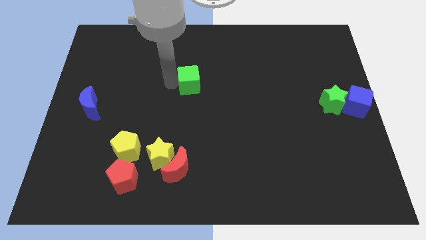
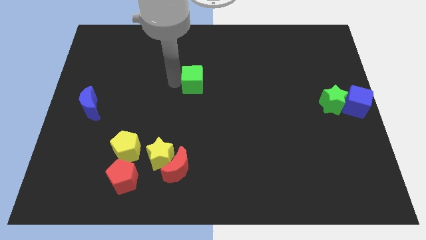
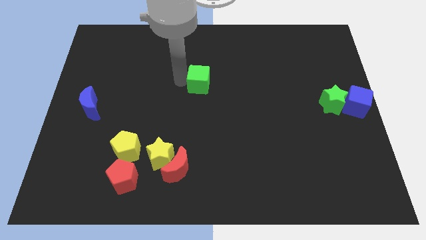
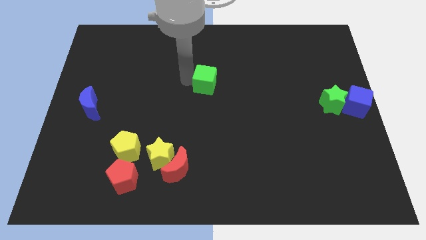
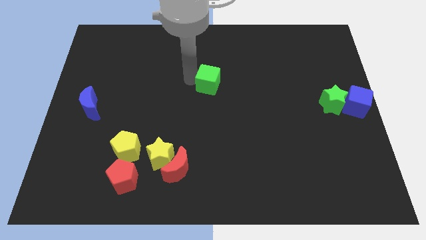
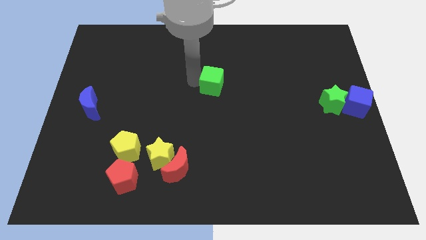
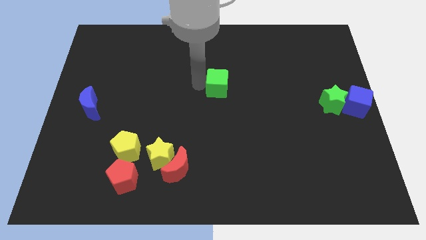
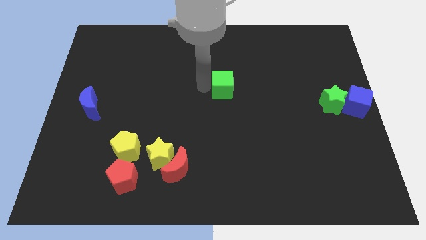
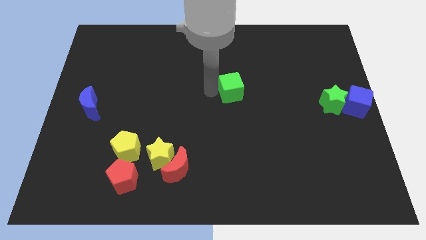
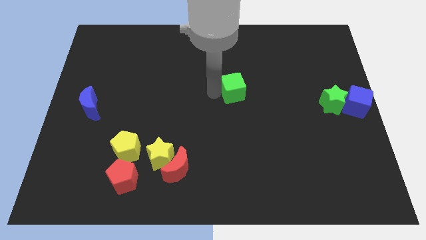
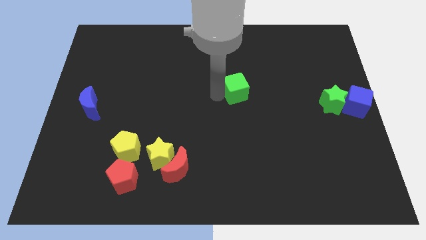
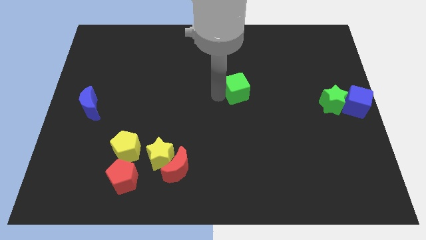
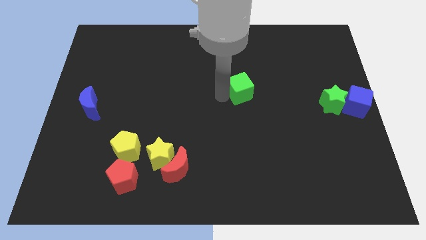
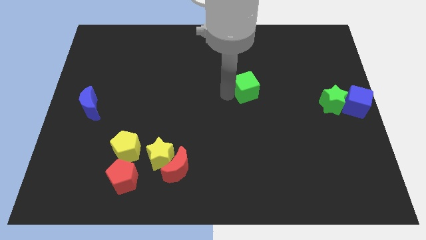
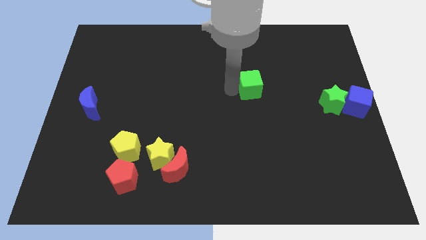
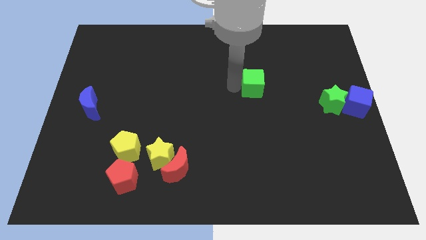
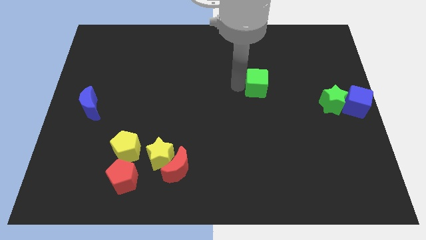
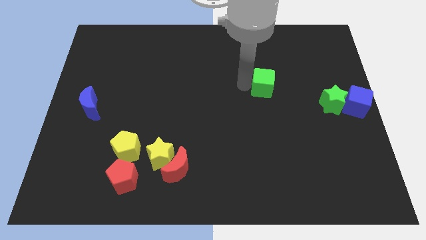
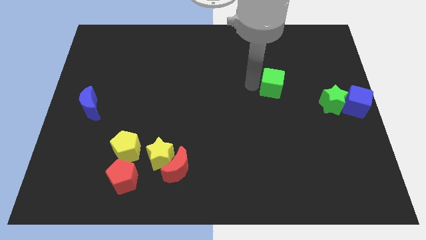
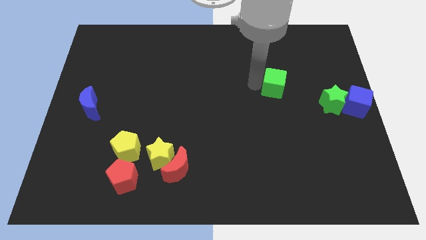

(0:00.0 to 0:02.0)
slide the green cube towards the green star

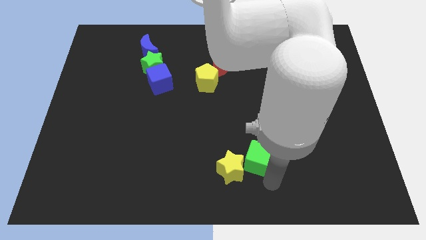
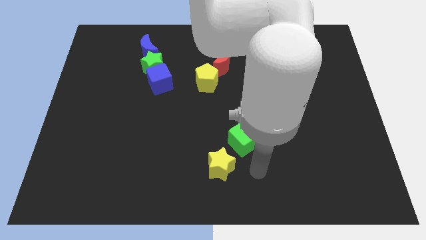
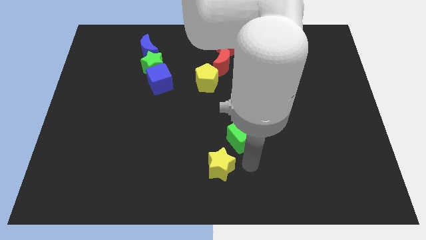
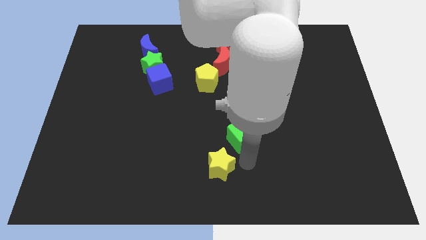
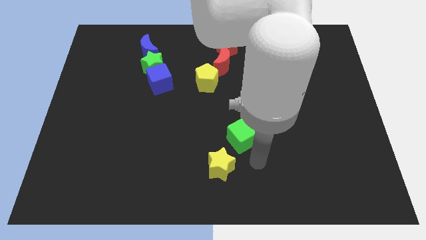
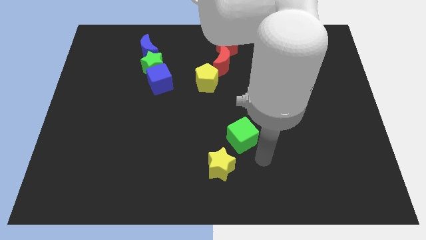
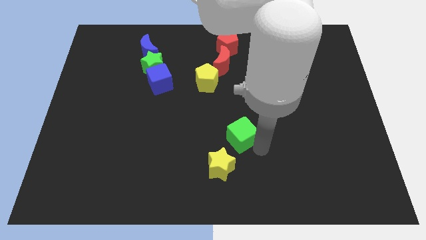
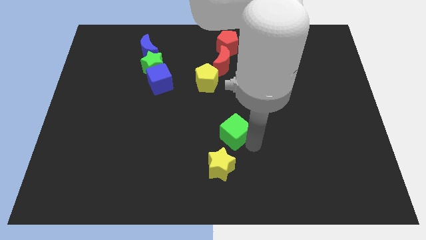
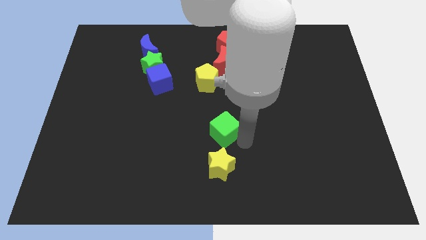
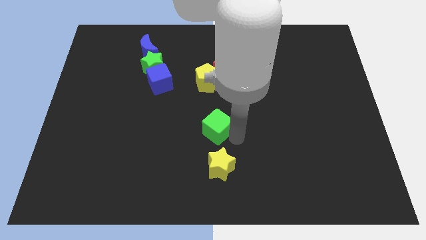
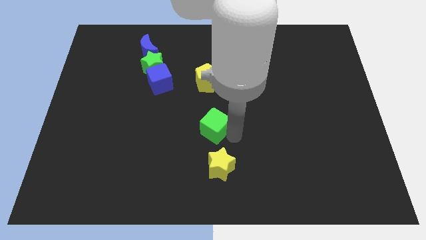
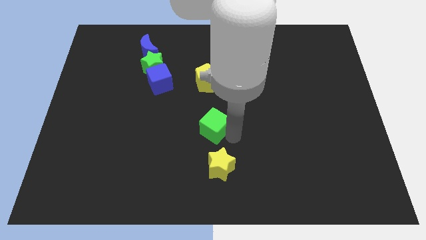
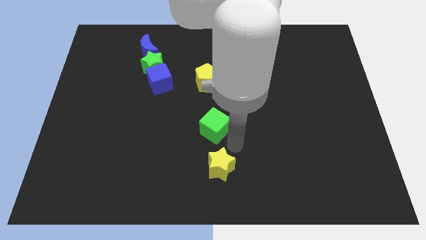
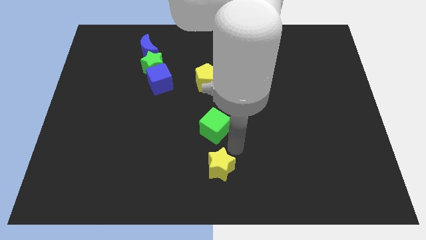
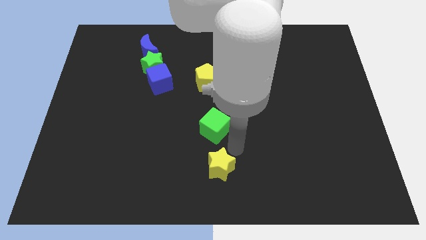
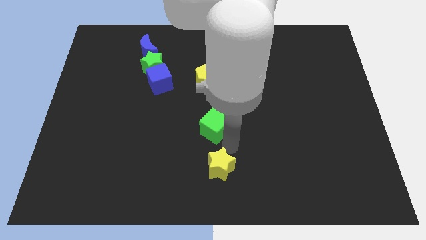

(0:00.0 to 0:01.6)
put the green cube vertically below the yellow pentagon

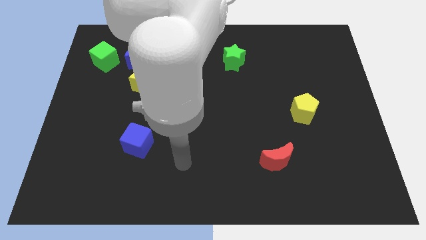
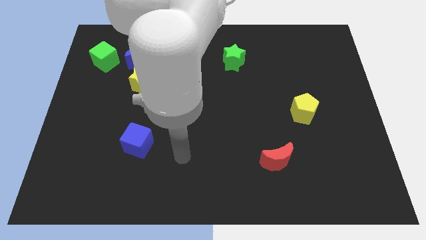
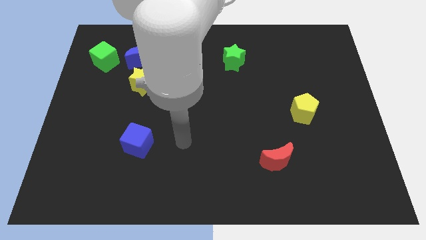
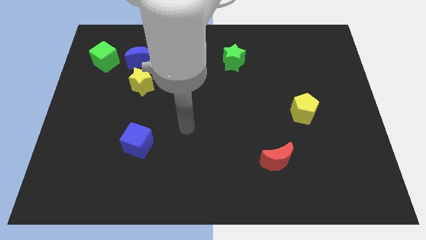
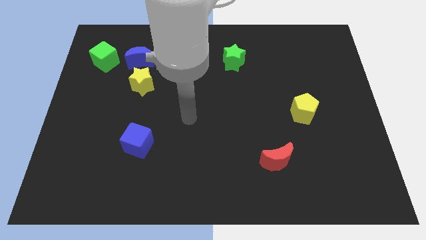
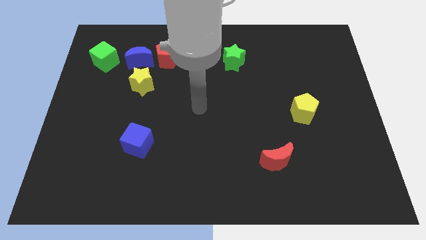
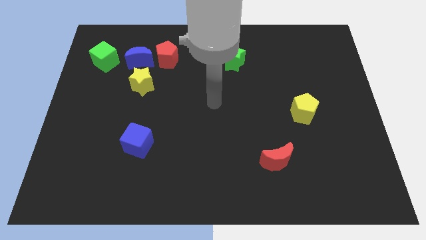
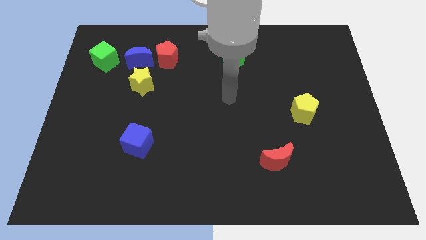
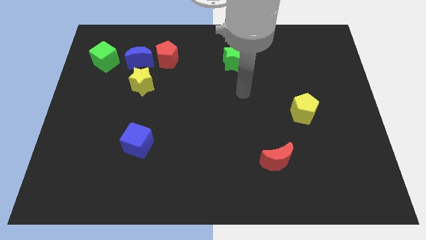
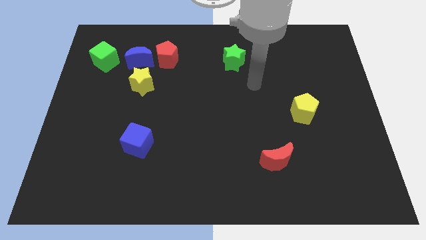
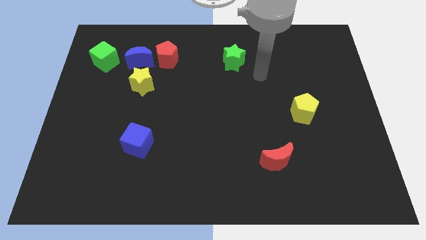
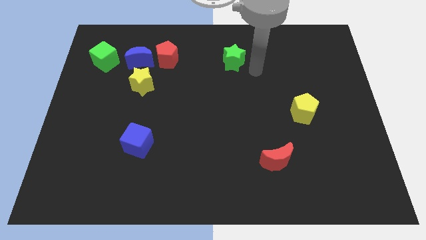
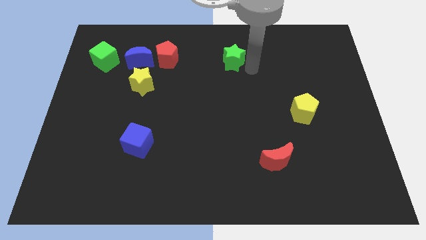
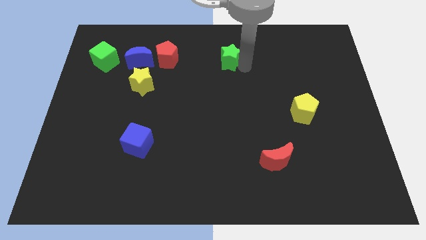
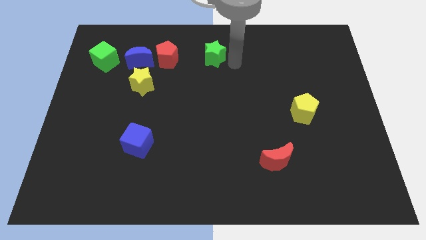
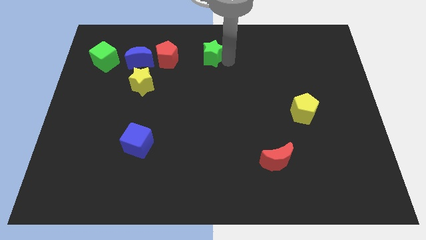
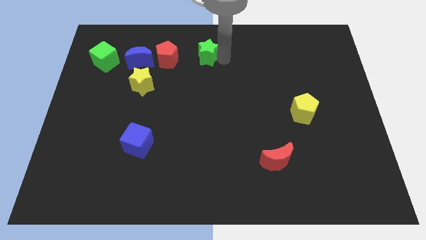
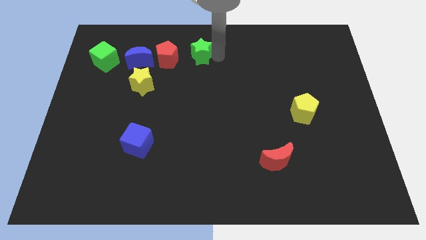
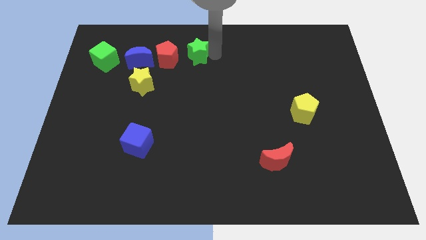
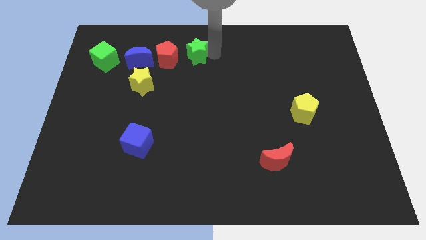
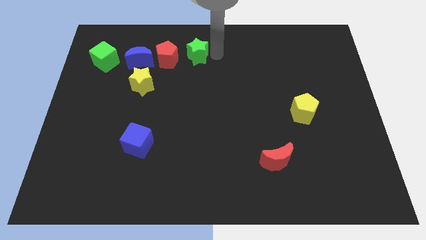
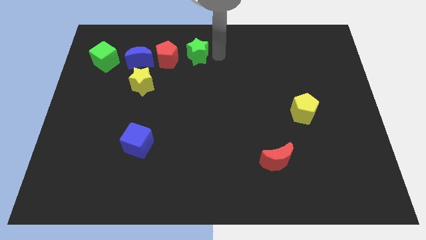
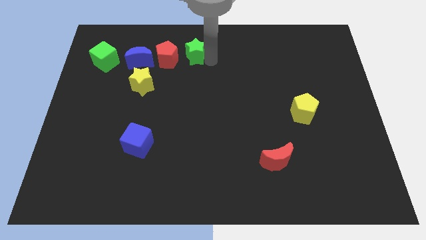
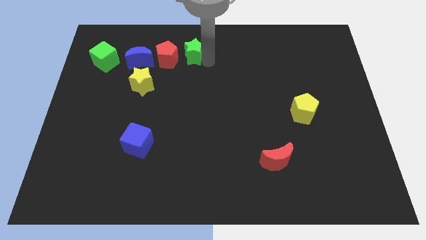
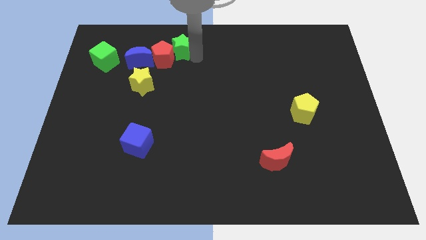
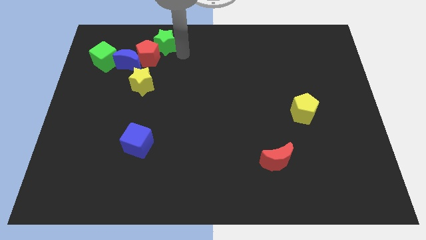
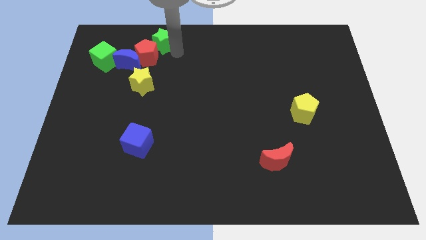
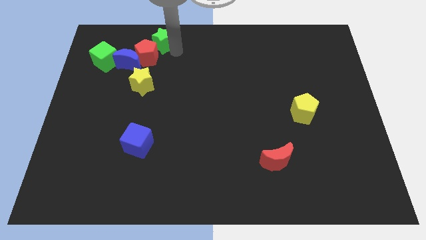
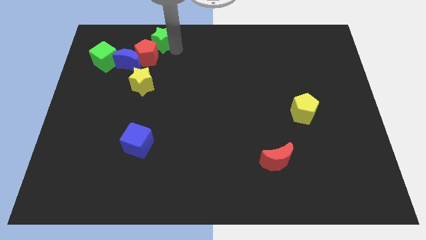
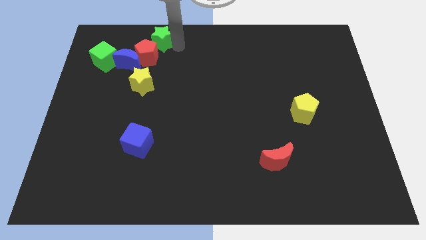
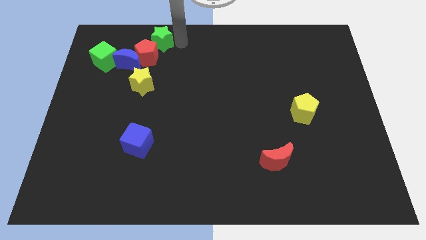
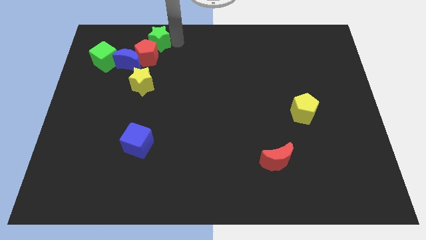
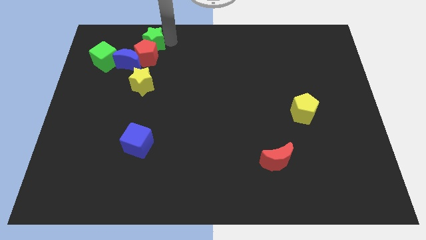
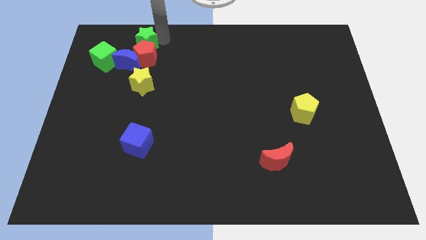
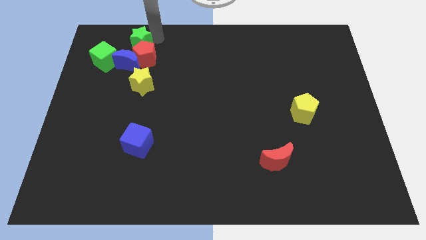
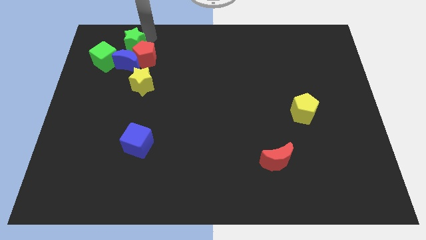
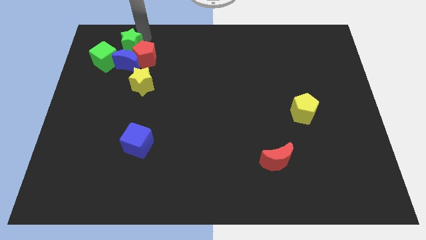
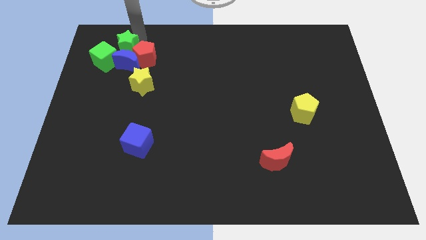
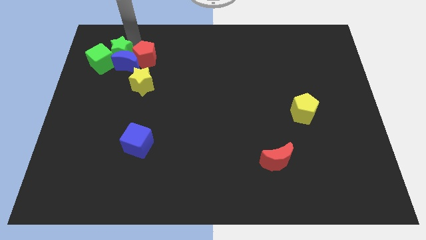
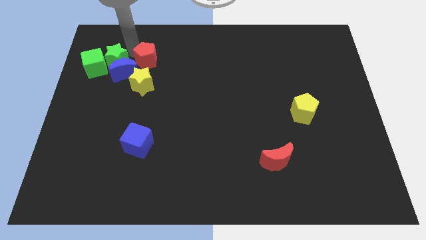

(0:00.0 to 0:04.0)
push the green star into the blue moon

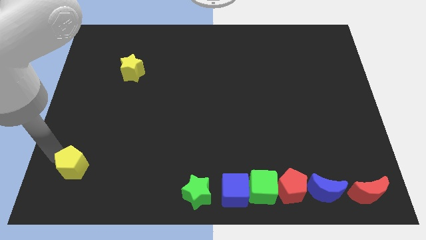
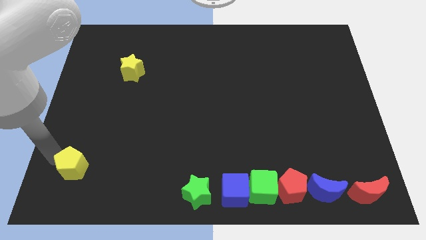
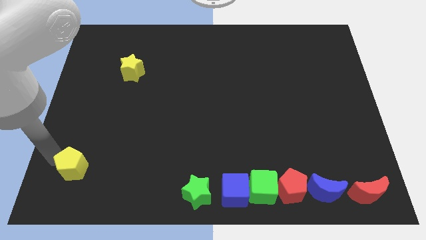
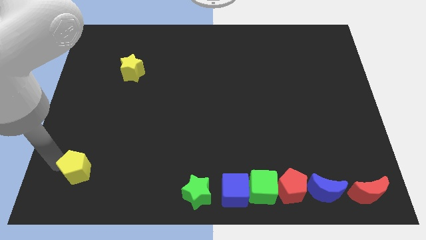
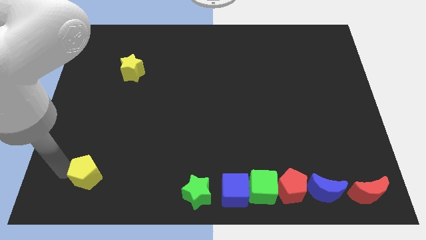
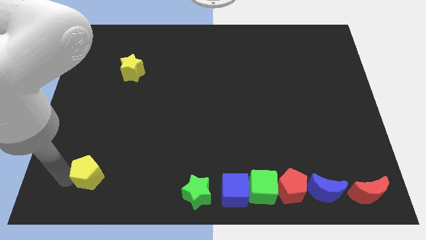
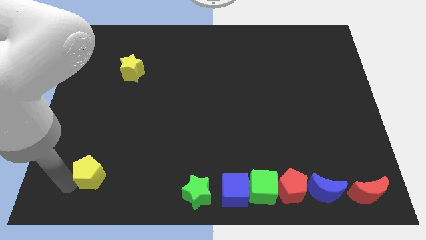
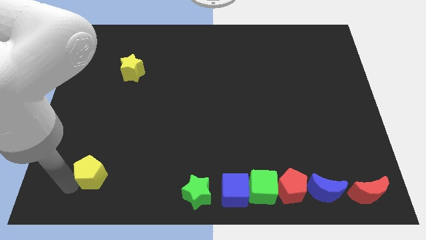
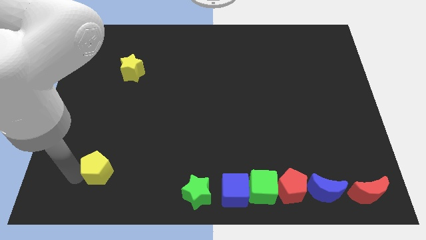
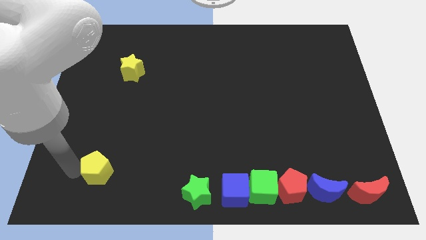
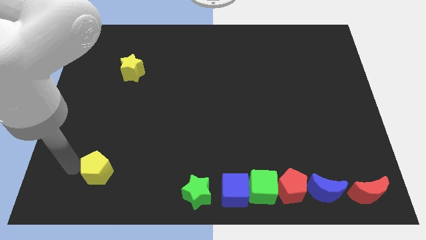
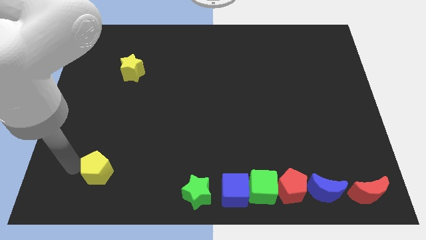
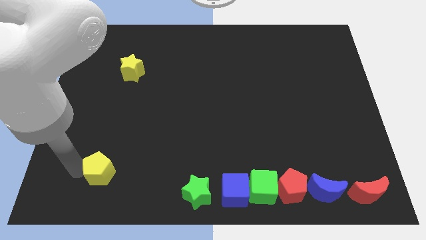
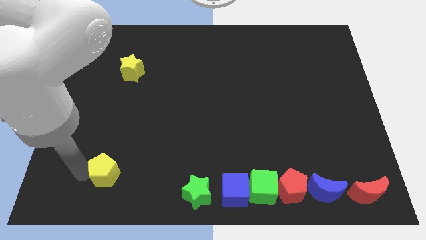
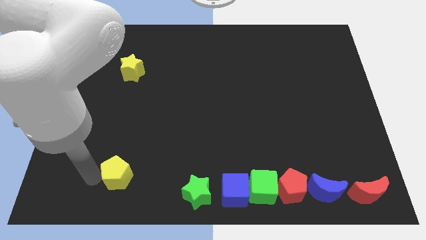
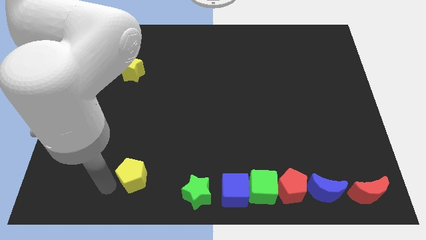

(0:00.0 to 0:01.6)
push the yellow pentagon towards right
